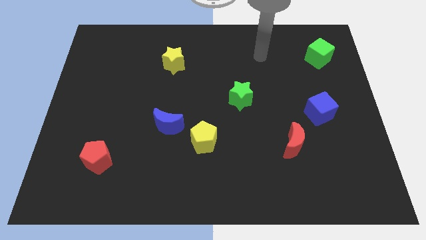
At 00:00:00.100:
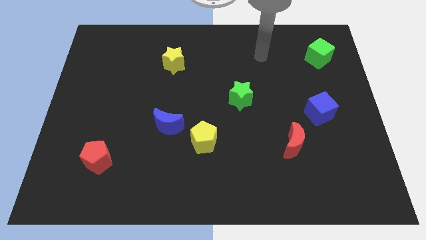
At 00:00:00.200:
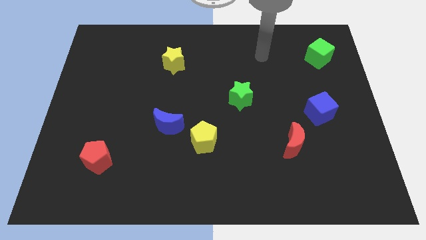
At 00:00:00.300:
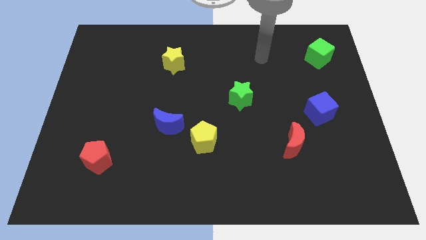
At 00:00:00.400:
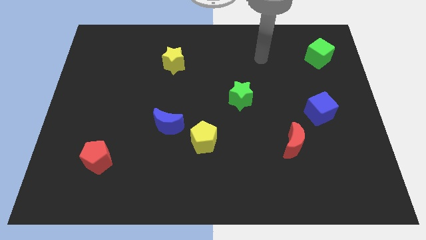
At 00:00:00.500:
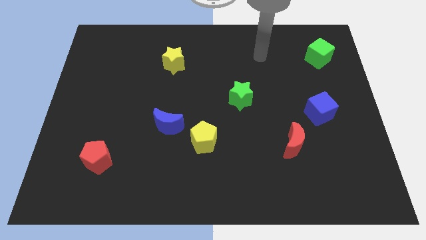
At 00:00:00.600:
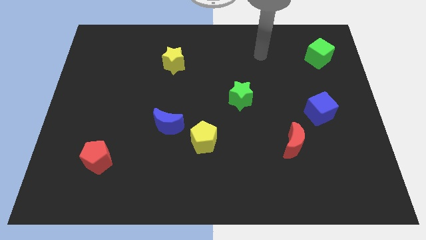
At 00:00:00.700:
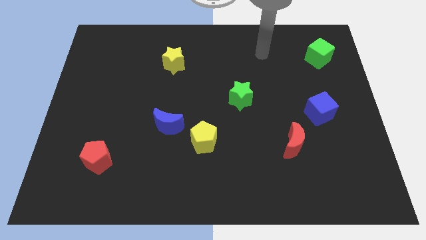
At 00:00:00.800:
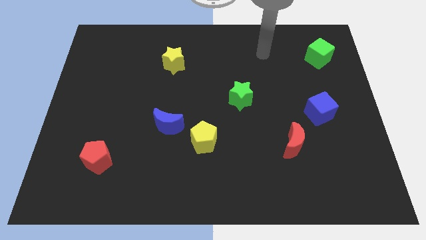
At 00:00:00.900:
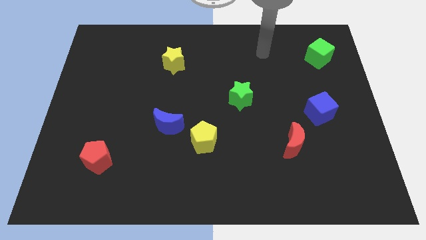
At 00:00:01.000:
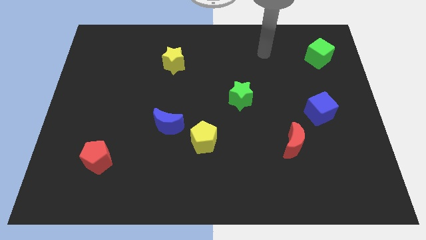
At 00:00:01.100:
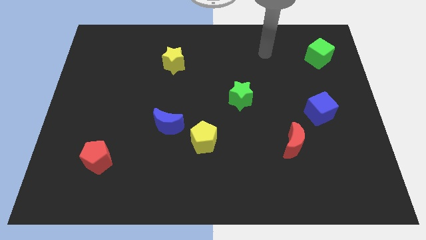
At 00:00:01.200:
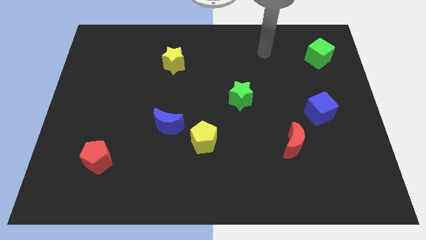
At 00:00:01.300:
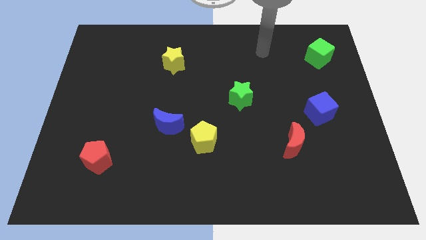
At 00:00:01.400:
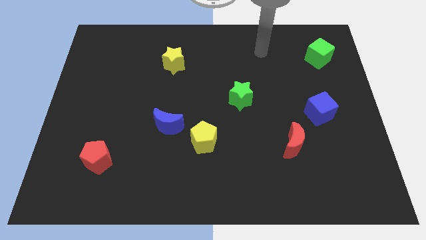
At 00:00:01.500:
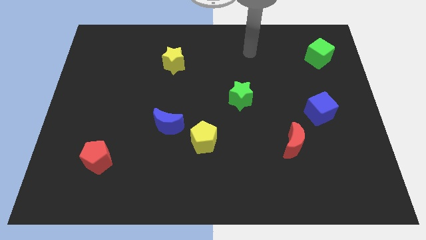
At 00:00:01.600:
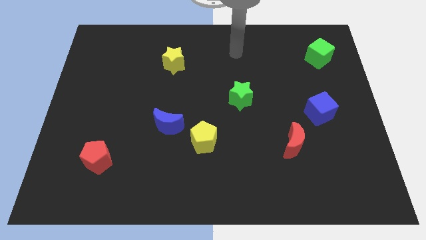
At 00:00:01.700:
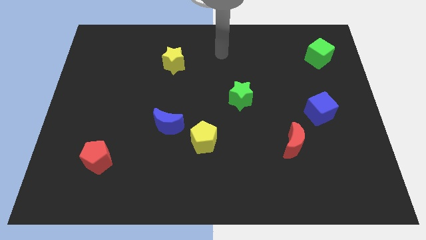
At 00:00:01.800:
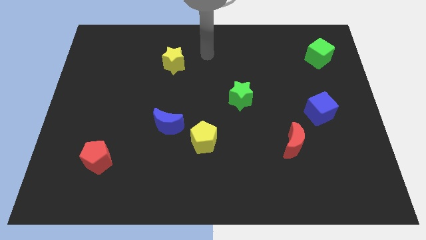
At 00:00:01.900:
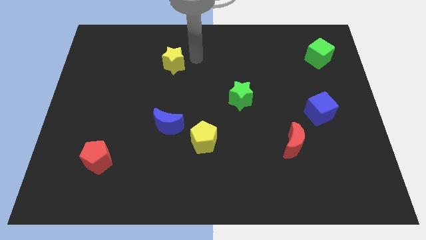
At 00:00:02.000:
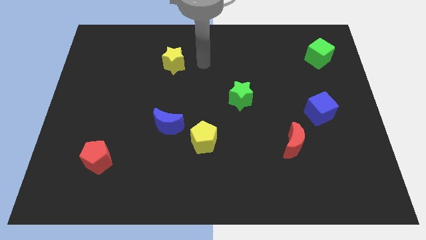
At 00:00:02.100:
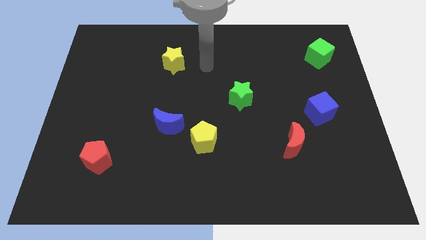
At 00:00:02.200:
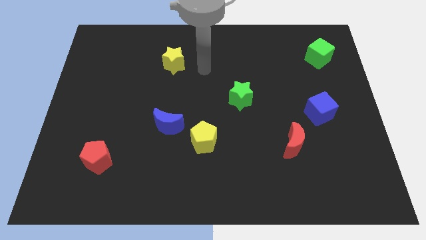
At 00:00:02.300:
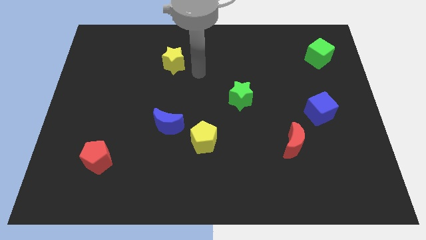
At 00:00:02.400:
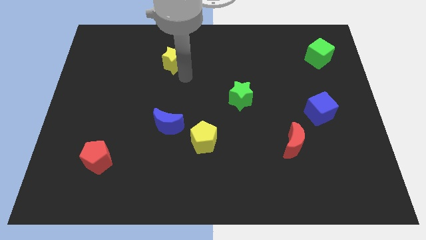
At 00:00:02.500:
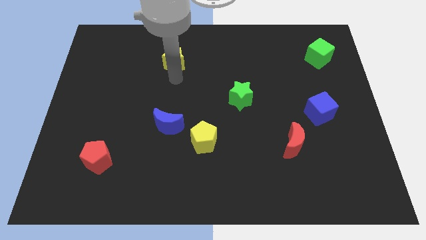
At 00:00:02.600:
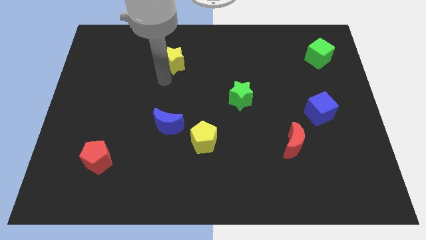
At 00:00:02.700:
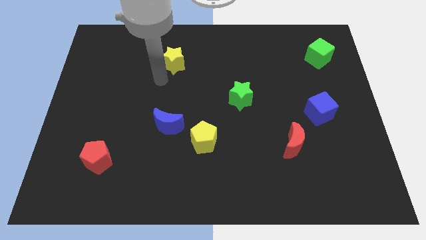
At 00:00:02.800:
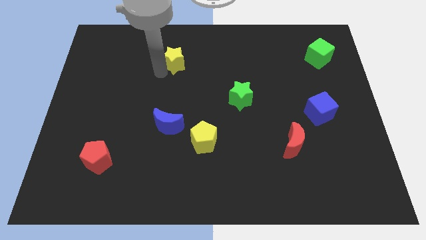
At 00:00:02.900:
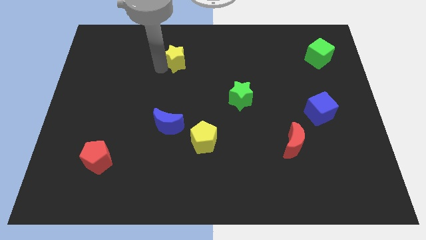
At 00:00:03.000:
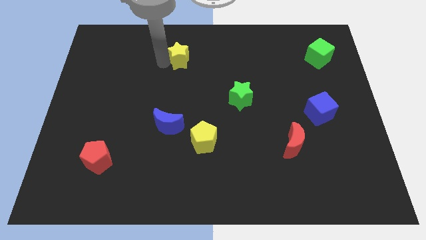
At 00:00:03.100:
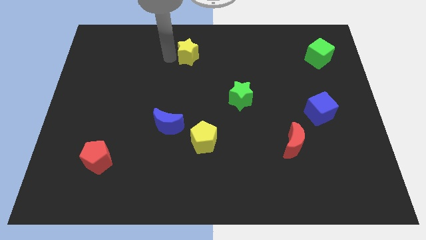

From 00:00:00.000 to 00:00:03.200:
place your arm to left side of the yellow star

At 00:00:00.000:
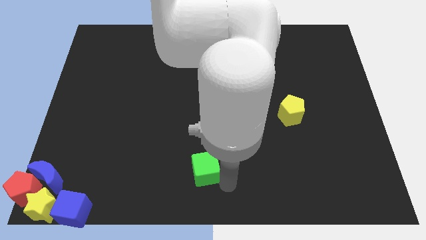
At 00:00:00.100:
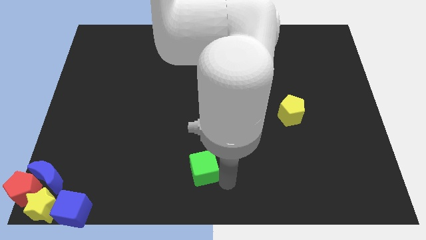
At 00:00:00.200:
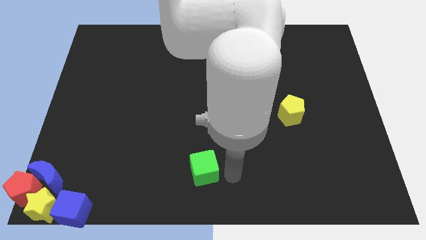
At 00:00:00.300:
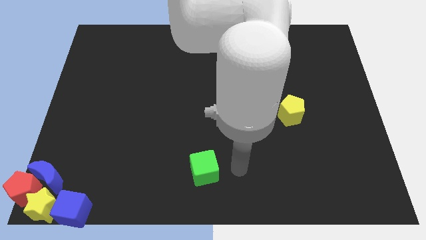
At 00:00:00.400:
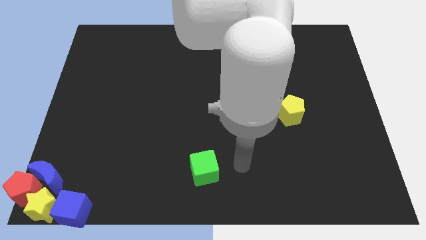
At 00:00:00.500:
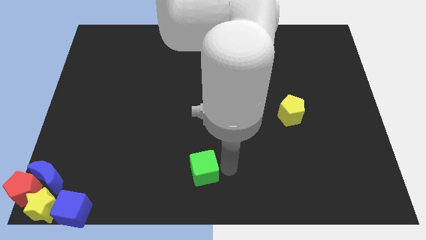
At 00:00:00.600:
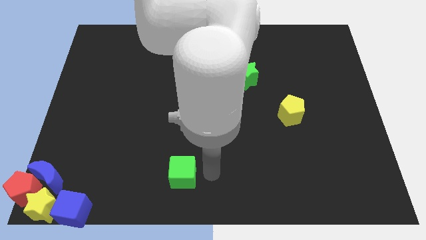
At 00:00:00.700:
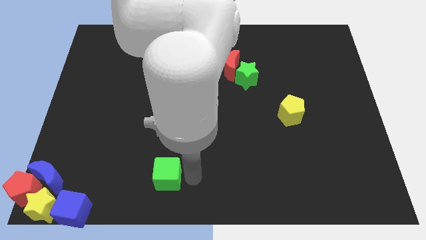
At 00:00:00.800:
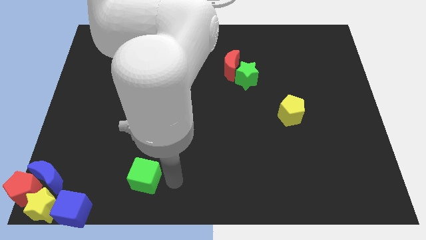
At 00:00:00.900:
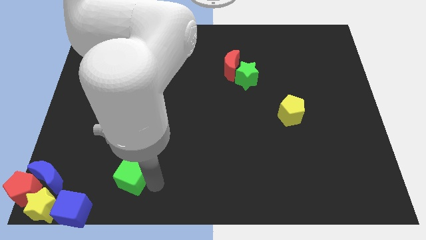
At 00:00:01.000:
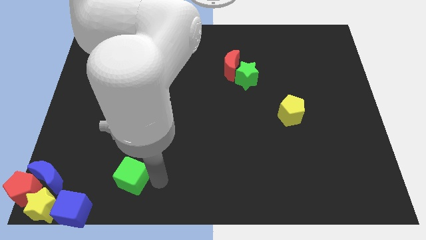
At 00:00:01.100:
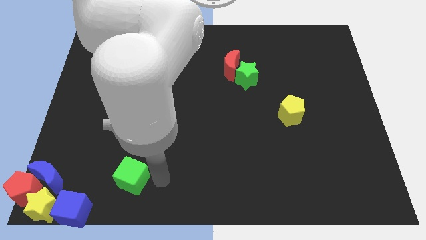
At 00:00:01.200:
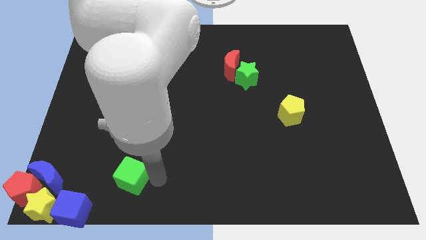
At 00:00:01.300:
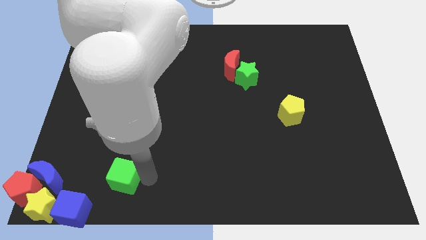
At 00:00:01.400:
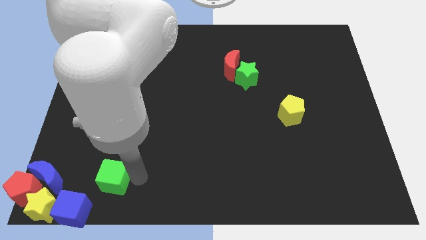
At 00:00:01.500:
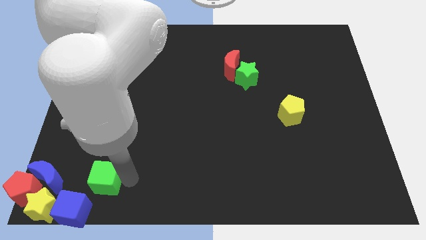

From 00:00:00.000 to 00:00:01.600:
place the green cube diagonally top right blue cube

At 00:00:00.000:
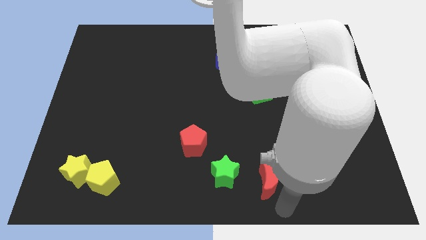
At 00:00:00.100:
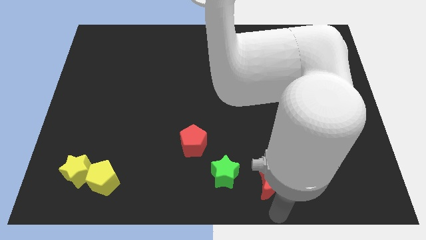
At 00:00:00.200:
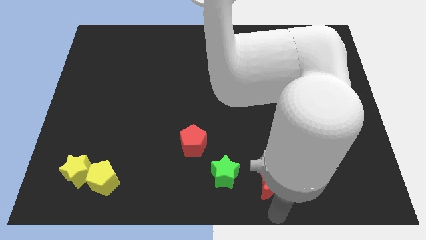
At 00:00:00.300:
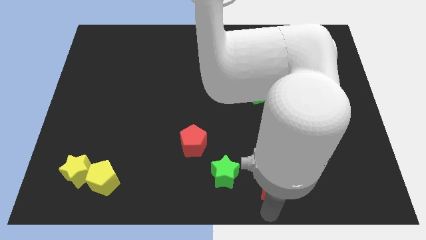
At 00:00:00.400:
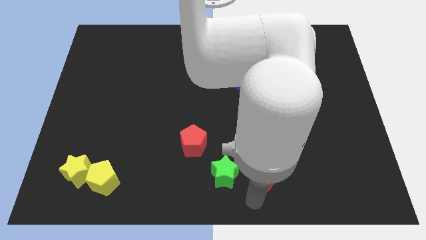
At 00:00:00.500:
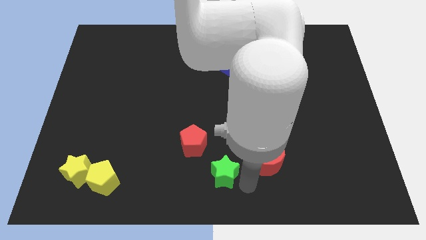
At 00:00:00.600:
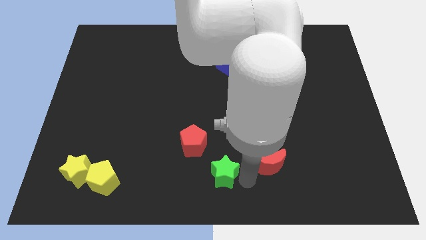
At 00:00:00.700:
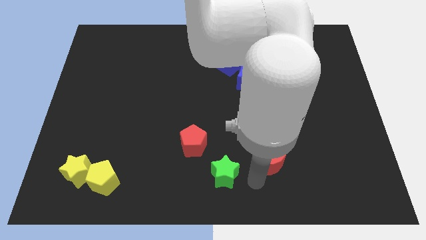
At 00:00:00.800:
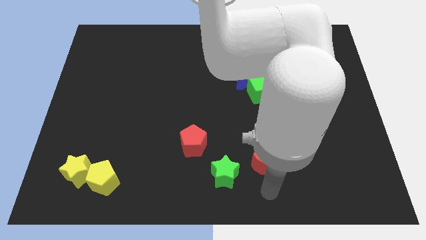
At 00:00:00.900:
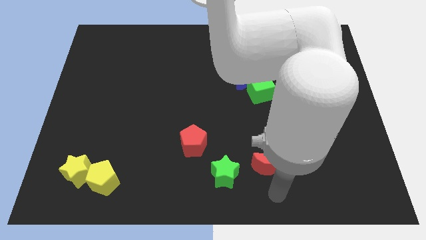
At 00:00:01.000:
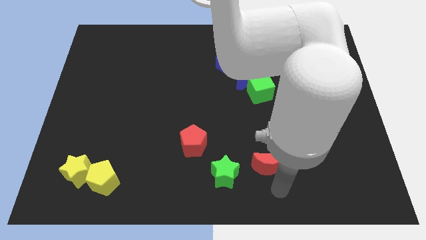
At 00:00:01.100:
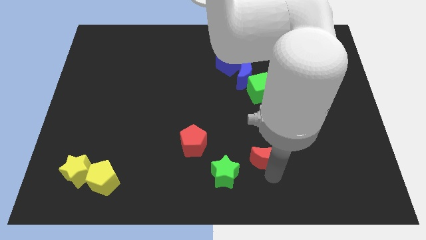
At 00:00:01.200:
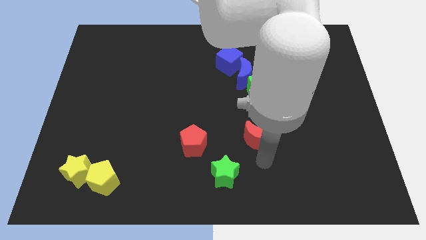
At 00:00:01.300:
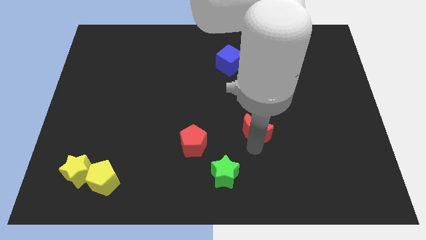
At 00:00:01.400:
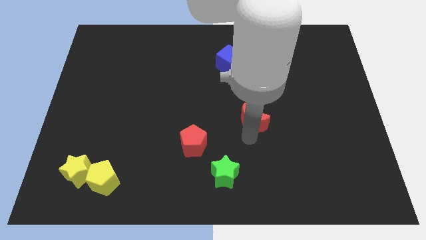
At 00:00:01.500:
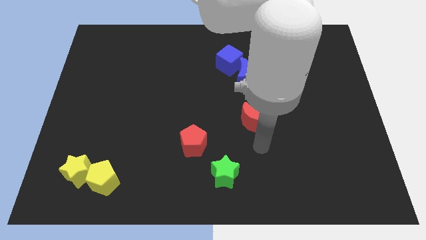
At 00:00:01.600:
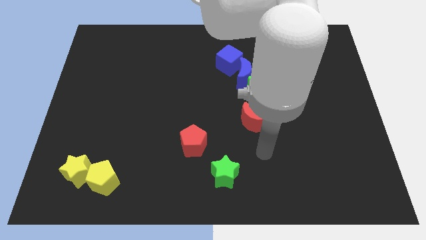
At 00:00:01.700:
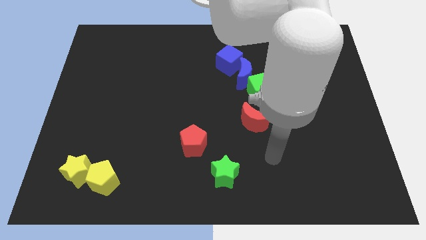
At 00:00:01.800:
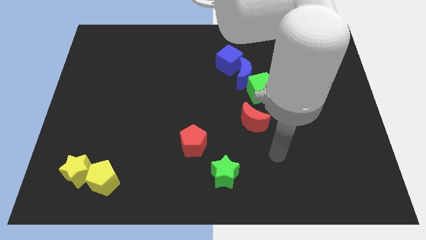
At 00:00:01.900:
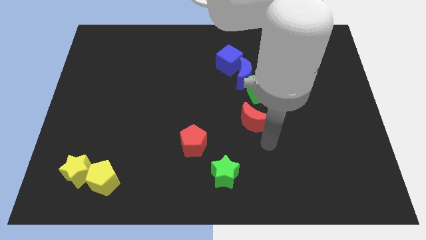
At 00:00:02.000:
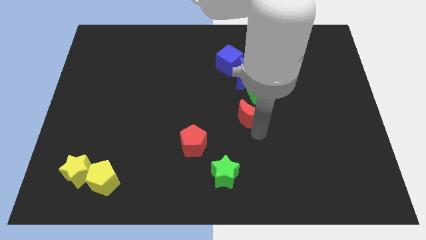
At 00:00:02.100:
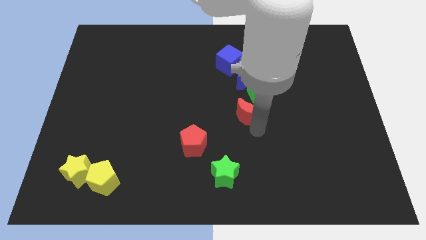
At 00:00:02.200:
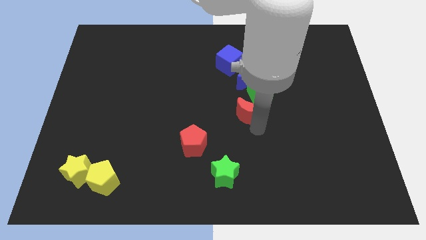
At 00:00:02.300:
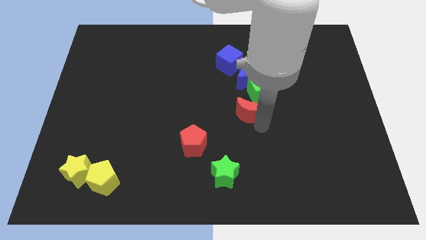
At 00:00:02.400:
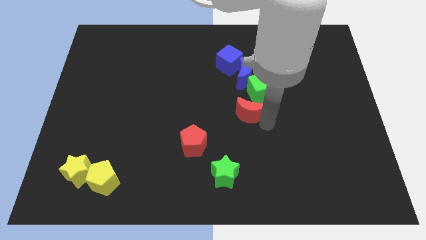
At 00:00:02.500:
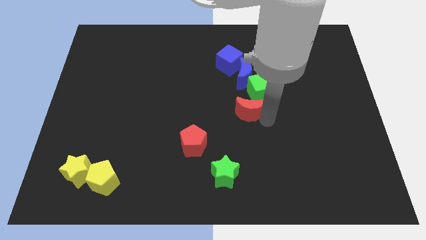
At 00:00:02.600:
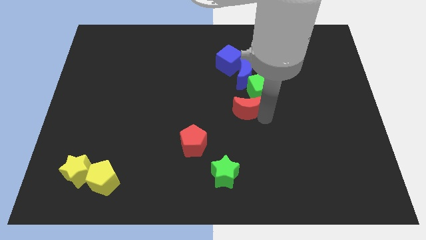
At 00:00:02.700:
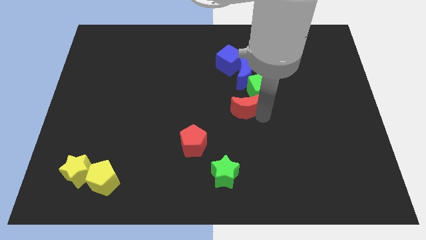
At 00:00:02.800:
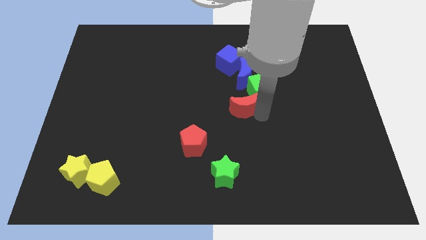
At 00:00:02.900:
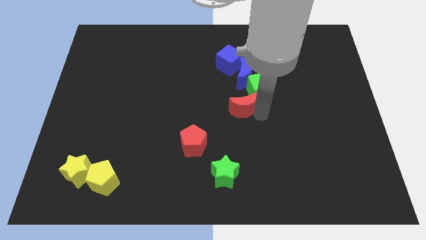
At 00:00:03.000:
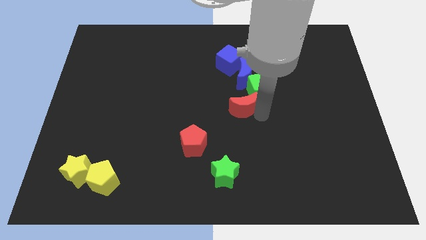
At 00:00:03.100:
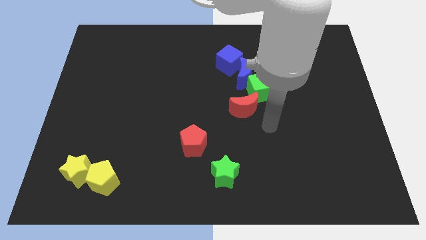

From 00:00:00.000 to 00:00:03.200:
push red crescent towards green cube

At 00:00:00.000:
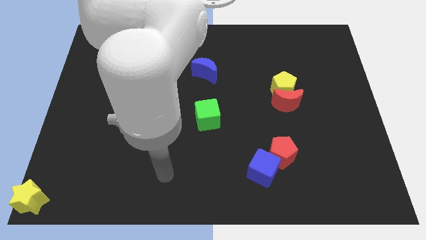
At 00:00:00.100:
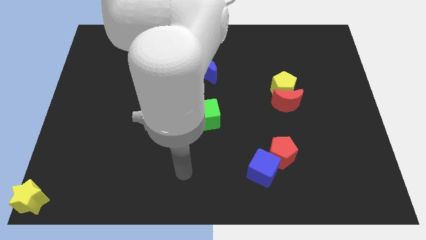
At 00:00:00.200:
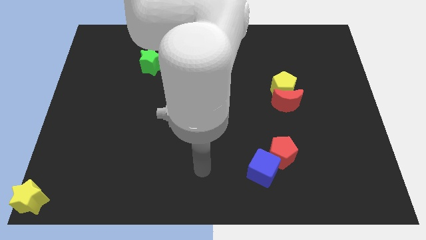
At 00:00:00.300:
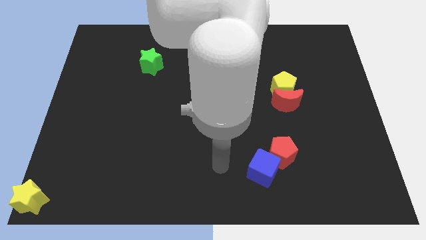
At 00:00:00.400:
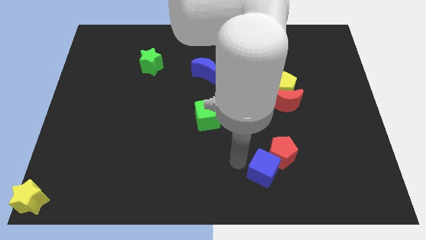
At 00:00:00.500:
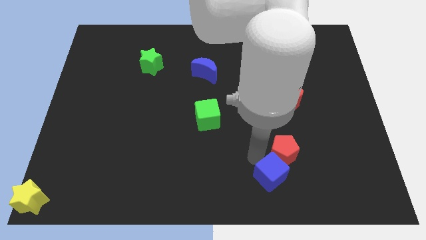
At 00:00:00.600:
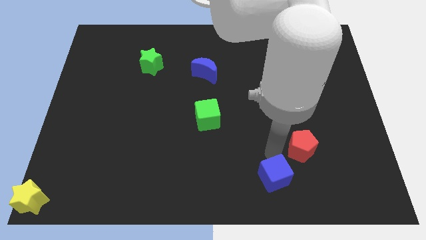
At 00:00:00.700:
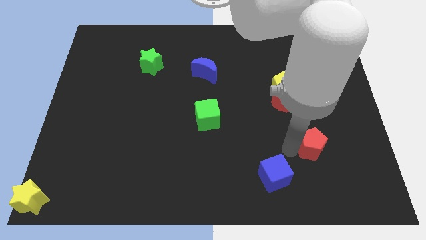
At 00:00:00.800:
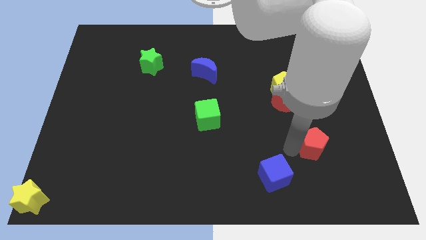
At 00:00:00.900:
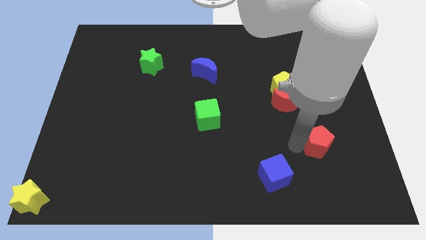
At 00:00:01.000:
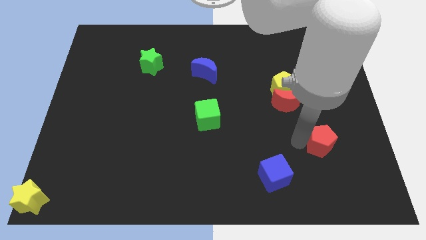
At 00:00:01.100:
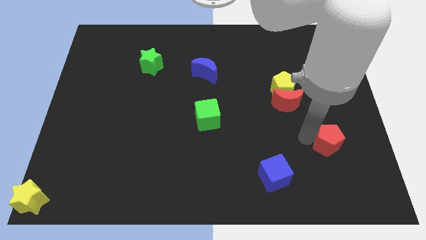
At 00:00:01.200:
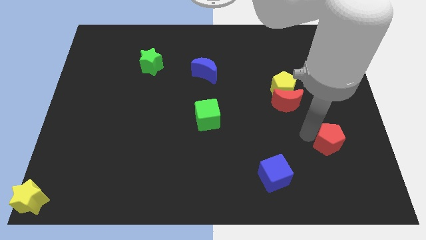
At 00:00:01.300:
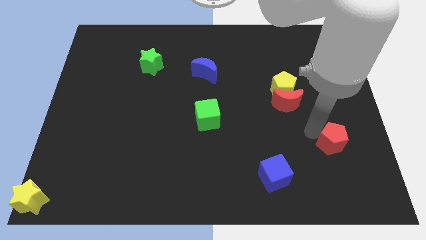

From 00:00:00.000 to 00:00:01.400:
separate the red pentagon from the blue cube
